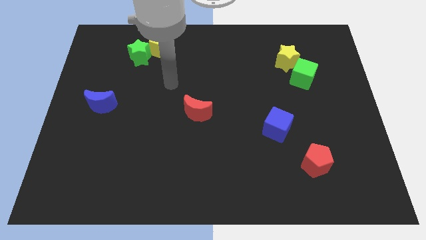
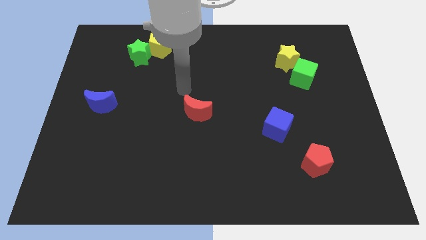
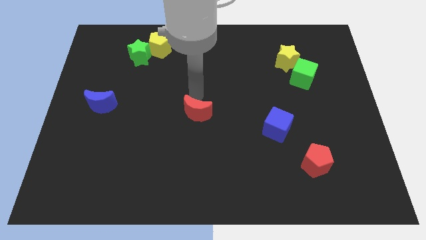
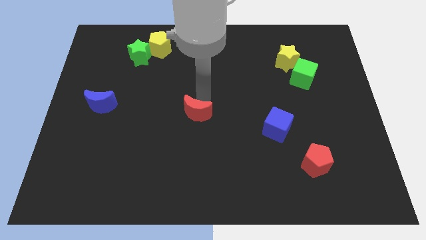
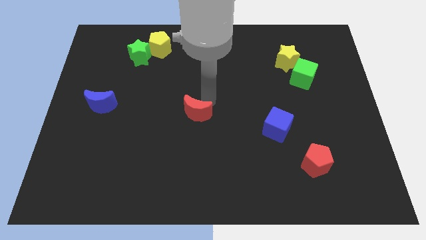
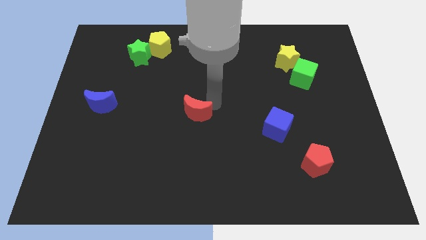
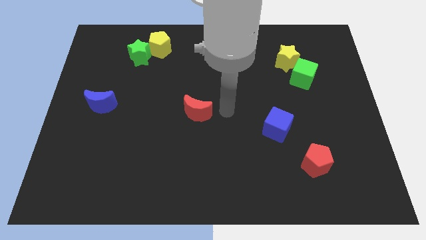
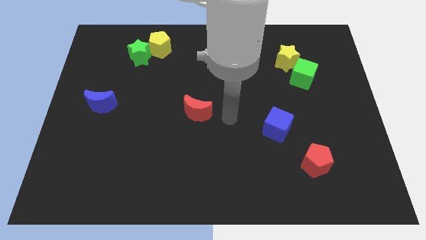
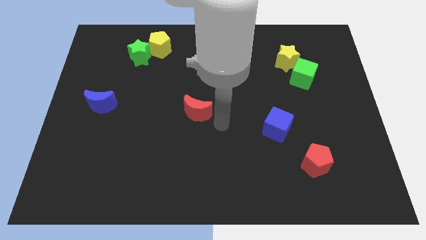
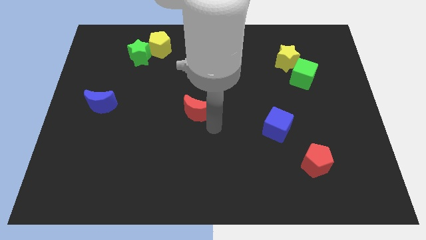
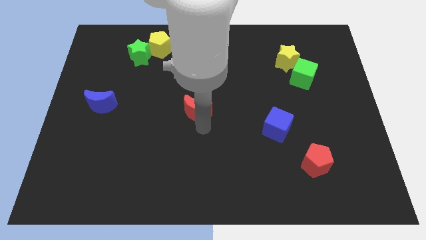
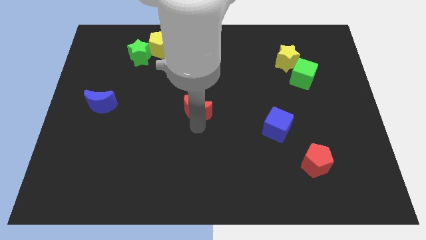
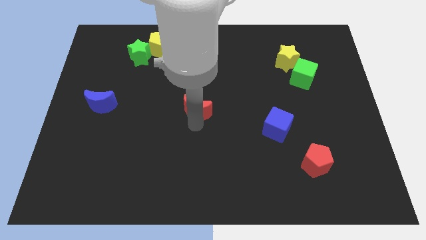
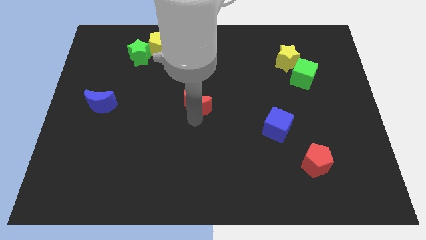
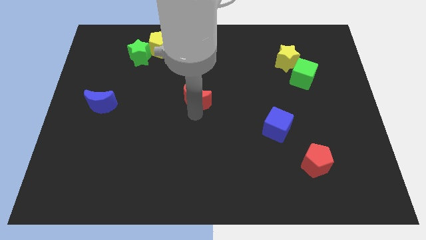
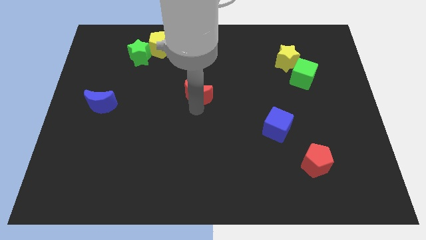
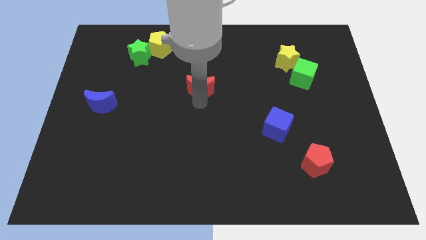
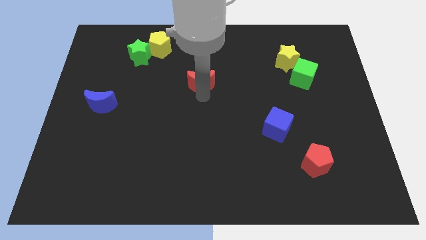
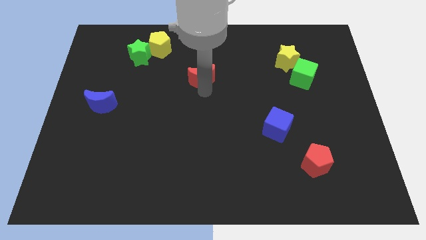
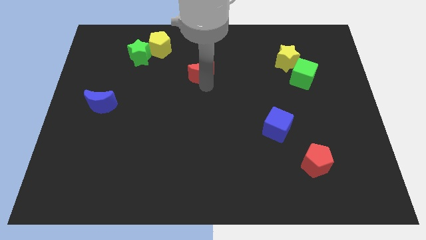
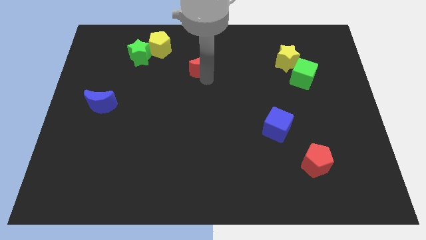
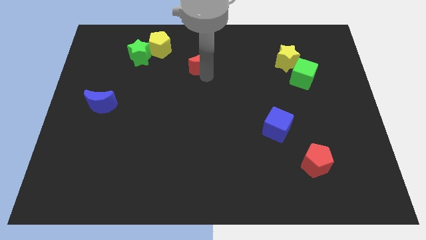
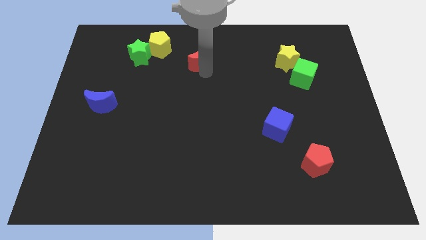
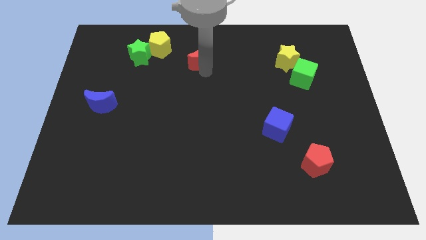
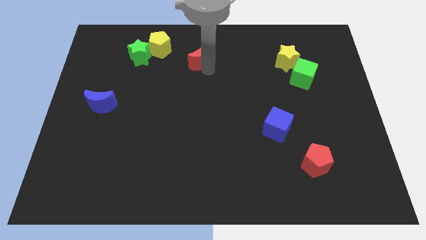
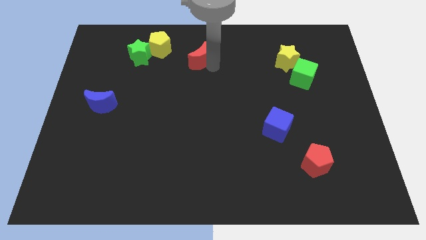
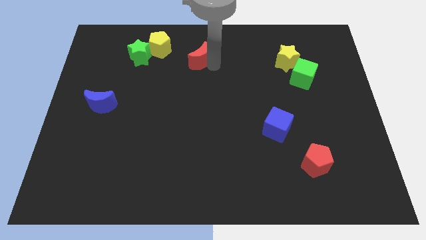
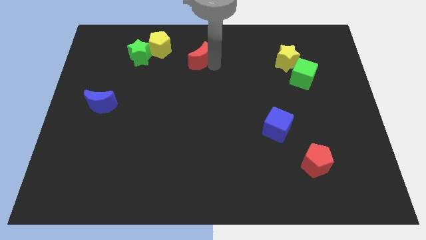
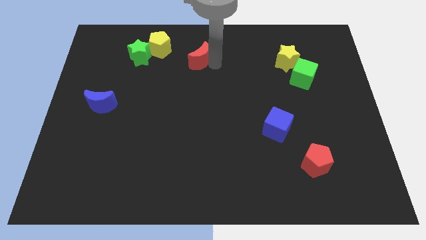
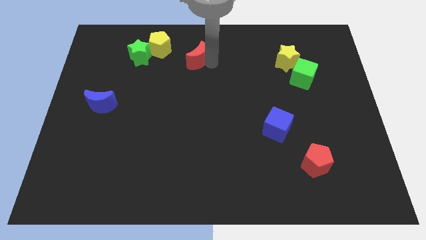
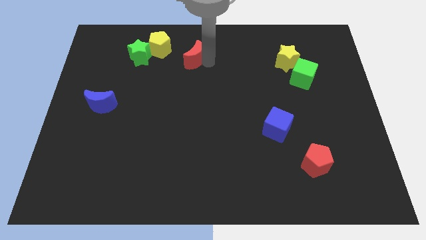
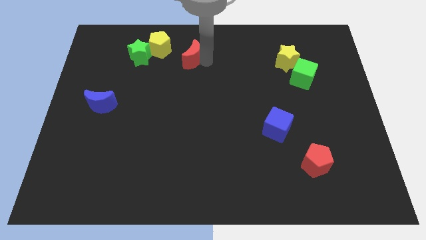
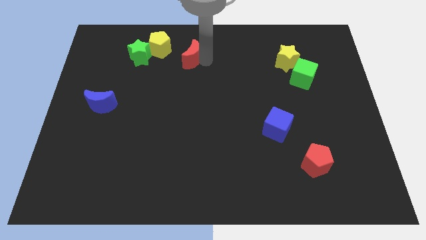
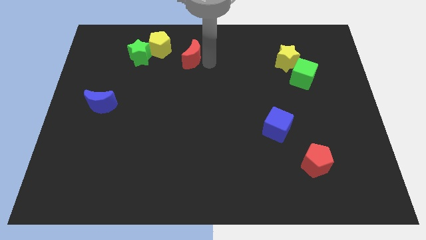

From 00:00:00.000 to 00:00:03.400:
push the red crescent towards the top

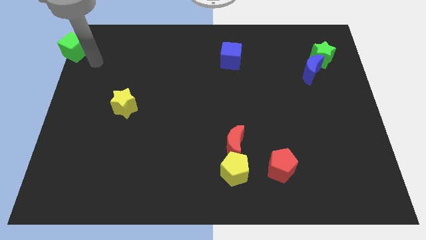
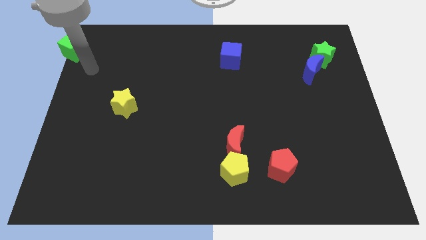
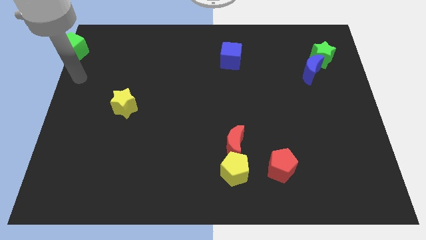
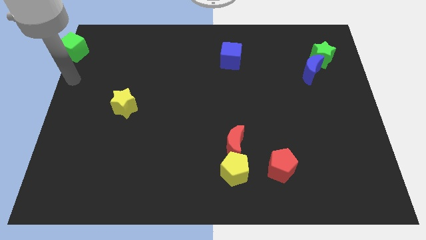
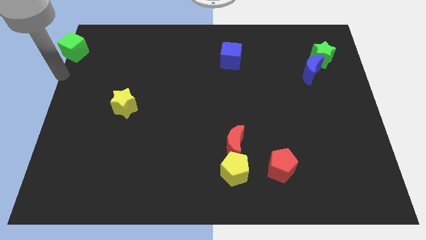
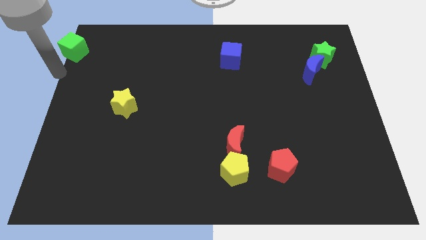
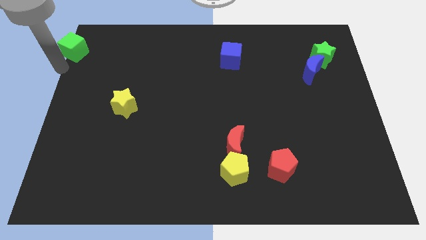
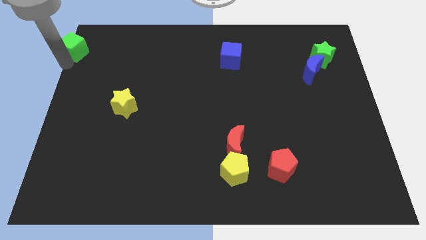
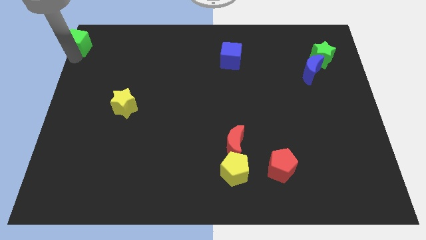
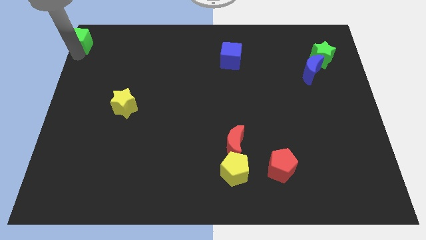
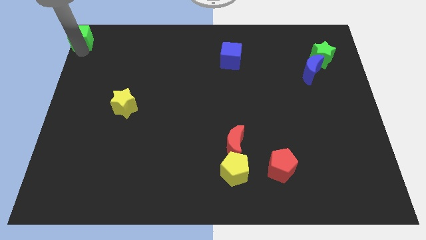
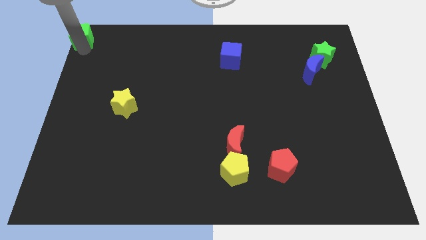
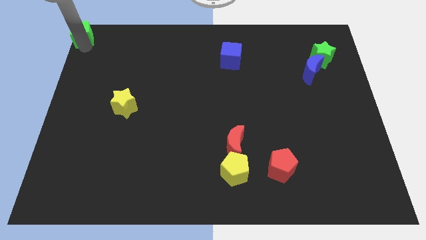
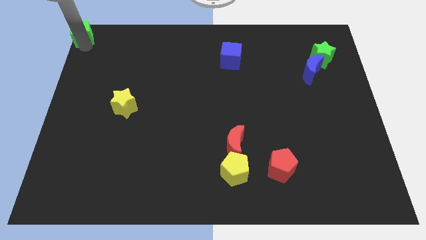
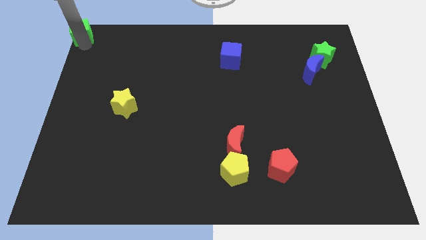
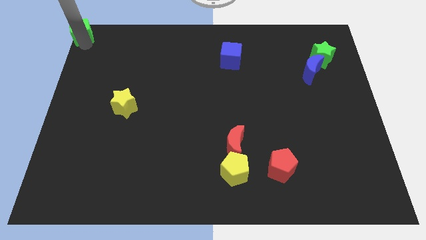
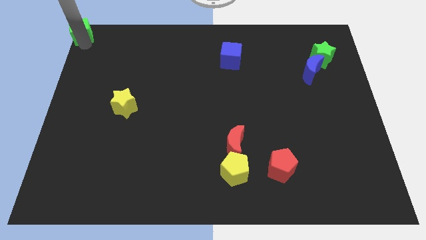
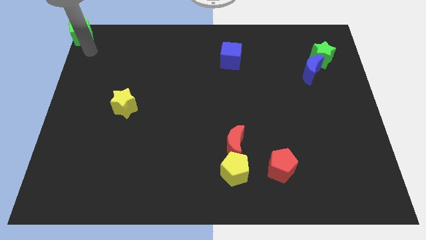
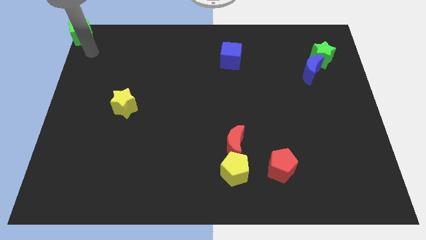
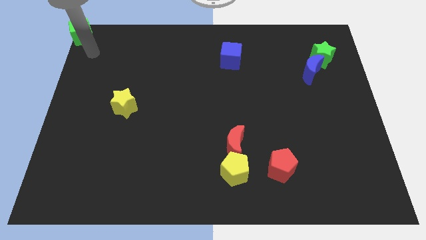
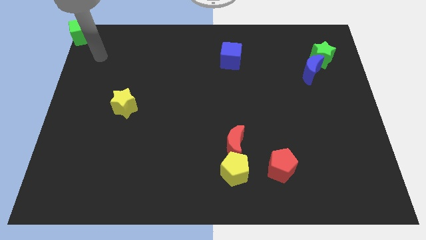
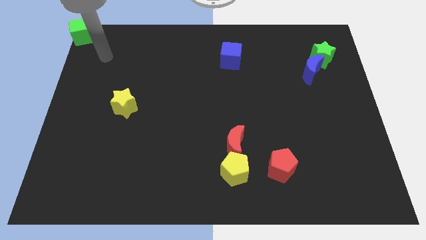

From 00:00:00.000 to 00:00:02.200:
slide the green cube to the top left corner of the board

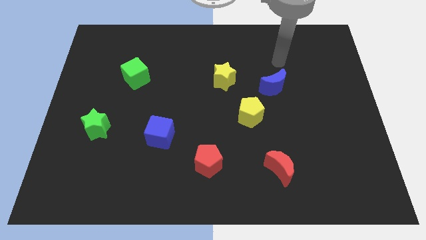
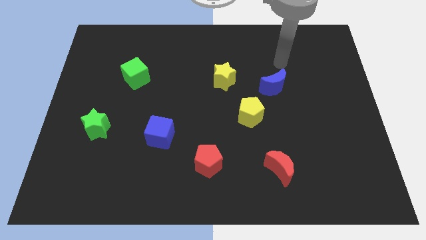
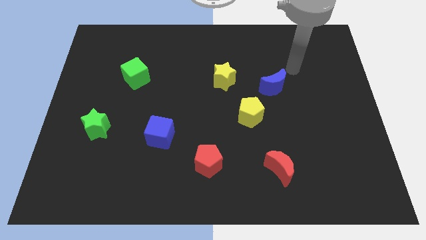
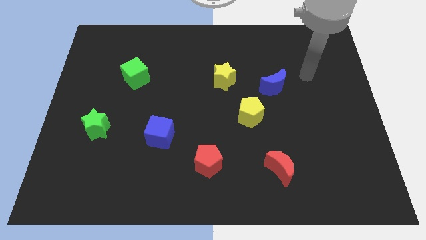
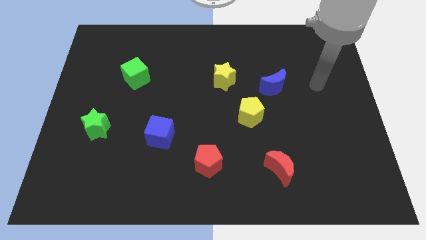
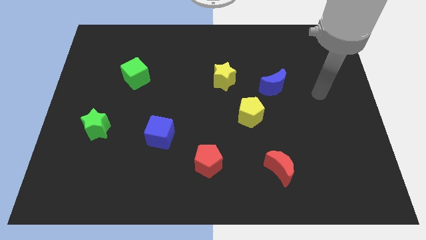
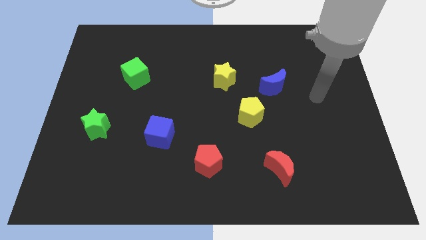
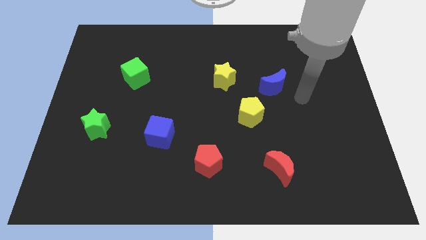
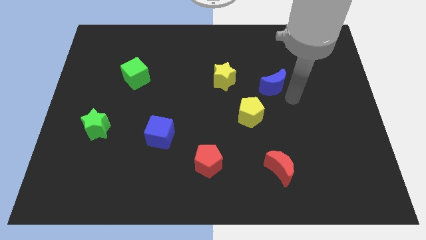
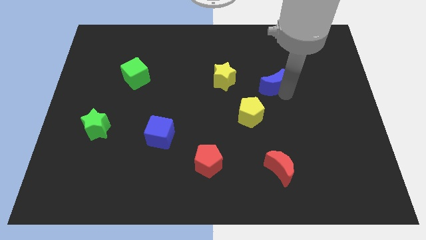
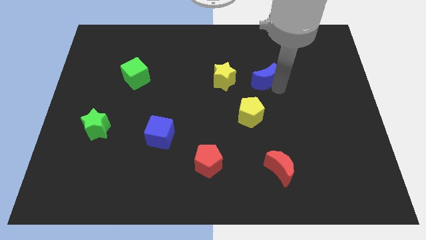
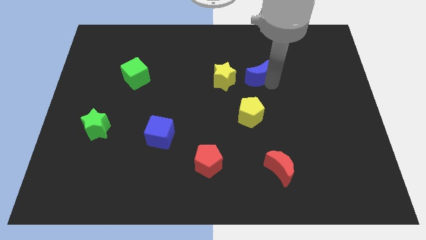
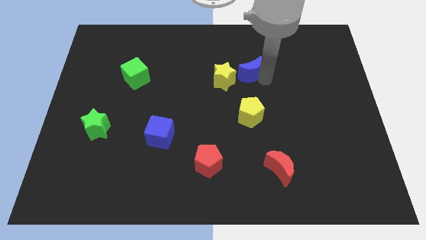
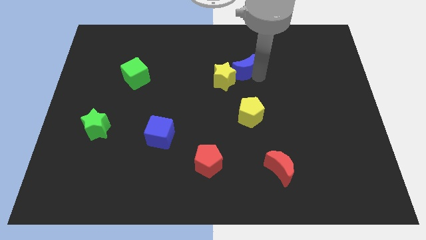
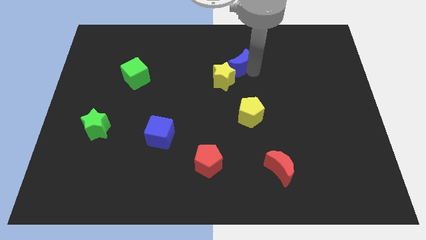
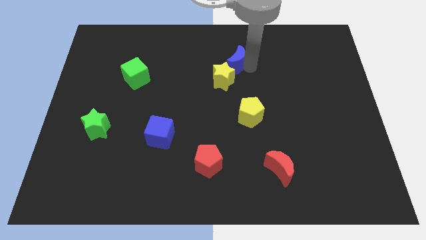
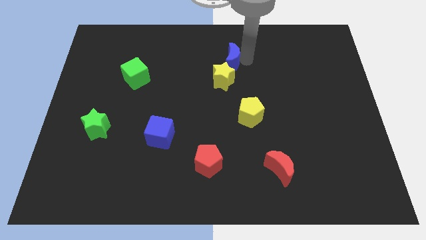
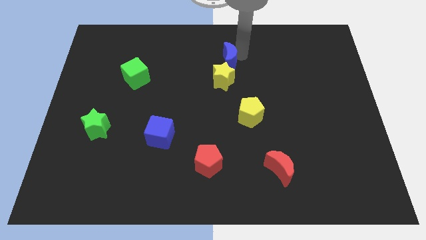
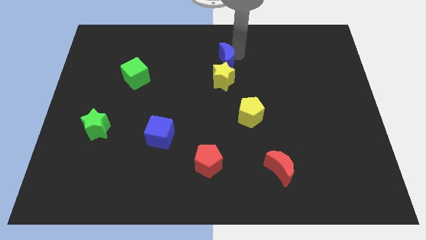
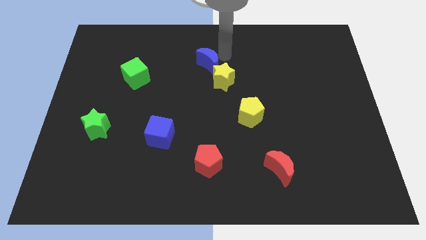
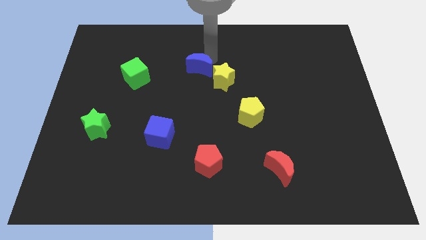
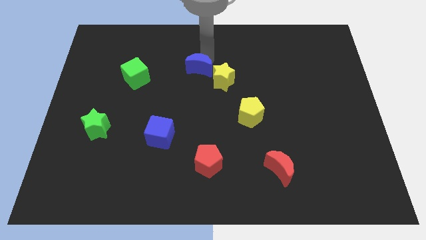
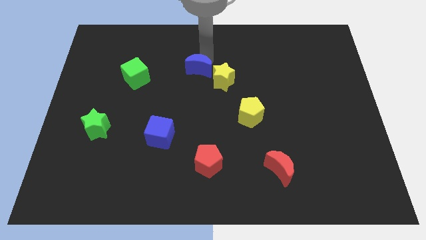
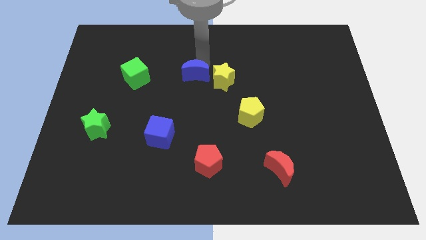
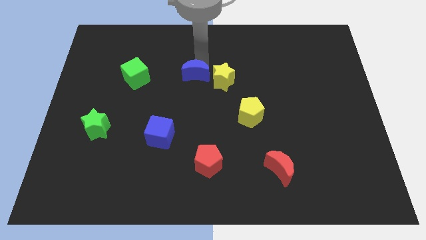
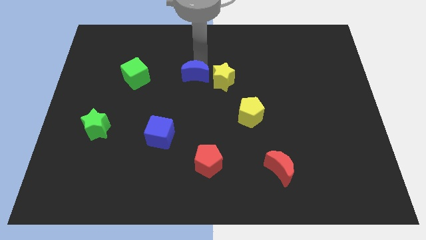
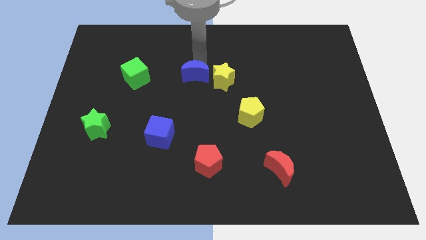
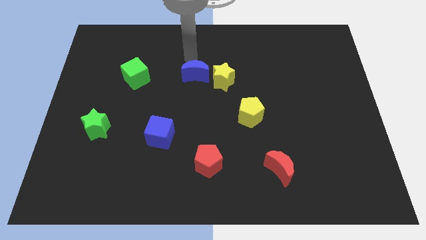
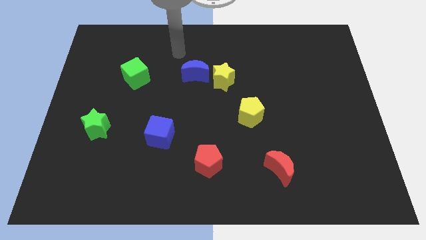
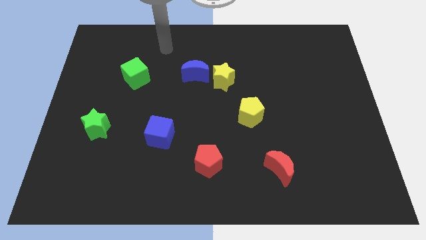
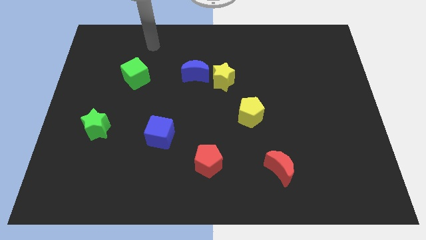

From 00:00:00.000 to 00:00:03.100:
place the blue moon to the left side of the yellow star
